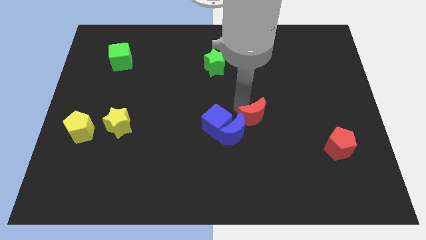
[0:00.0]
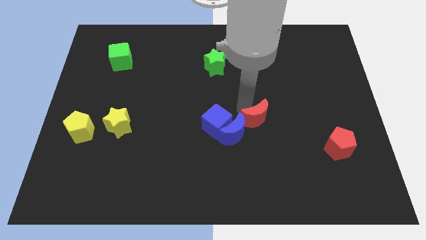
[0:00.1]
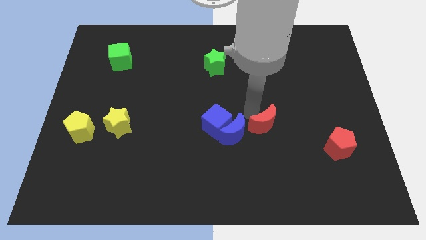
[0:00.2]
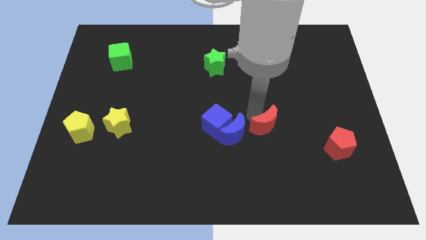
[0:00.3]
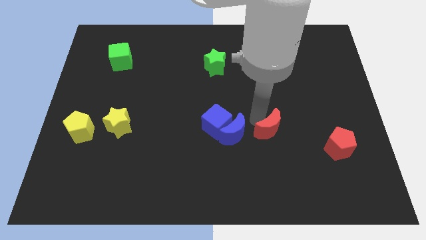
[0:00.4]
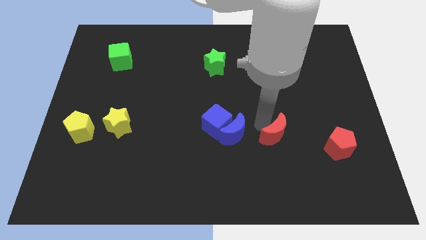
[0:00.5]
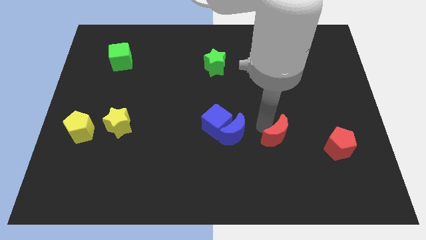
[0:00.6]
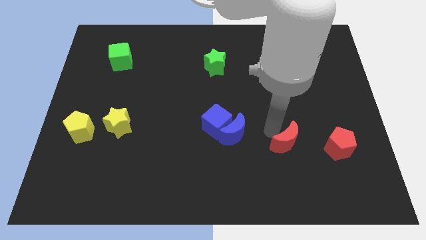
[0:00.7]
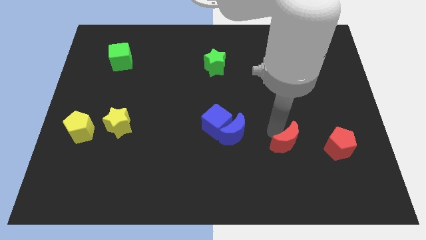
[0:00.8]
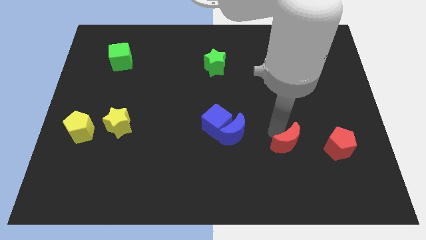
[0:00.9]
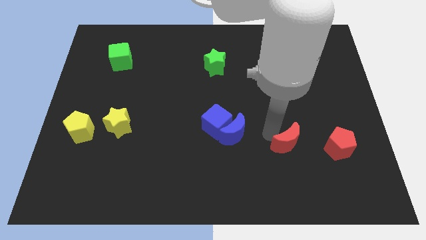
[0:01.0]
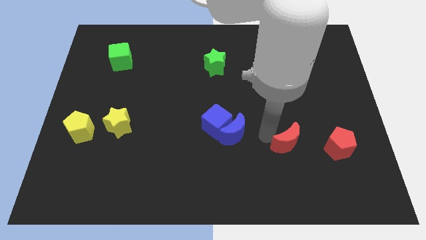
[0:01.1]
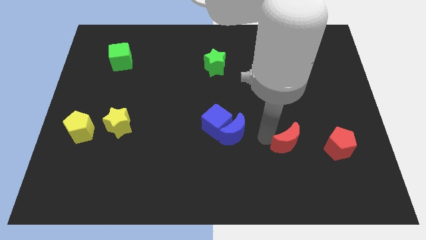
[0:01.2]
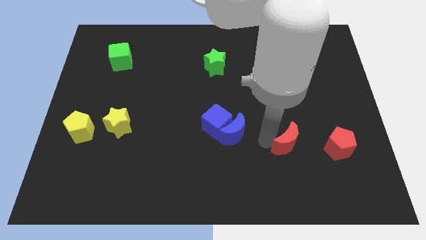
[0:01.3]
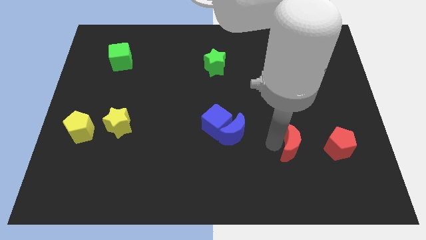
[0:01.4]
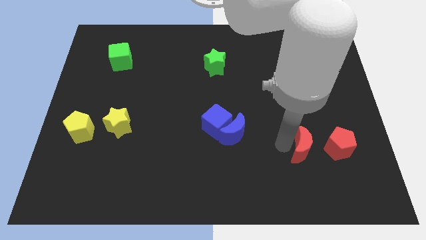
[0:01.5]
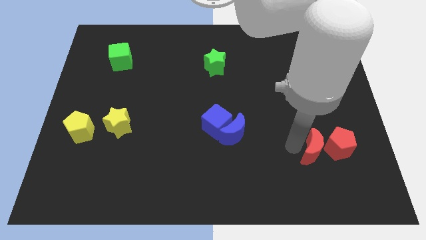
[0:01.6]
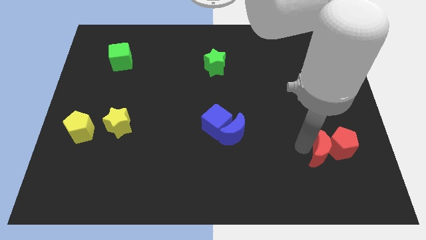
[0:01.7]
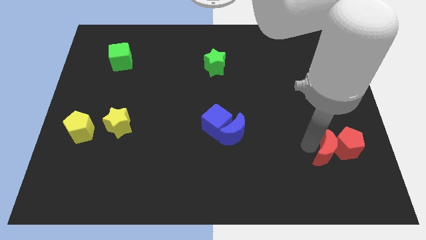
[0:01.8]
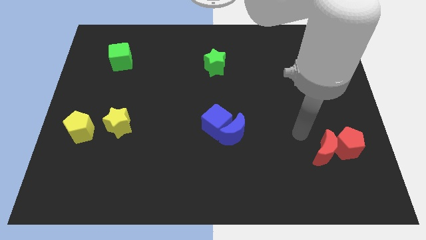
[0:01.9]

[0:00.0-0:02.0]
move the red crescent into the right to the red pentagon

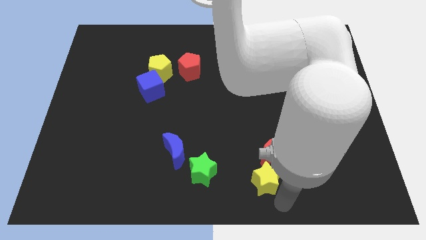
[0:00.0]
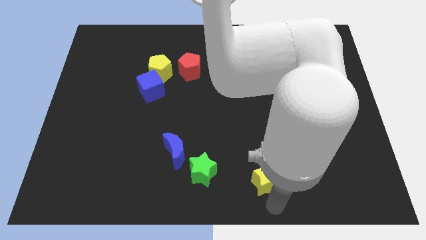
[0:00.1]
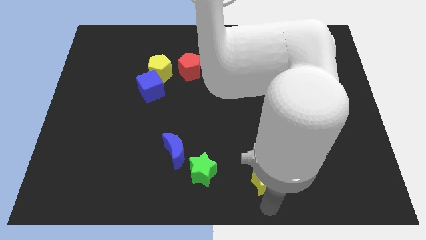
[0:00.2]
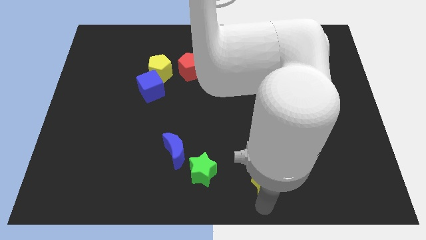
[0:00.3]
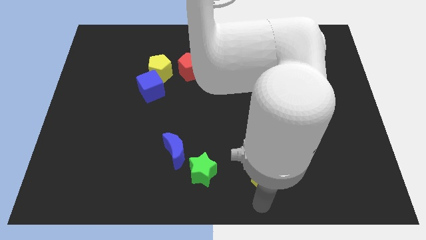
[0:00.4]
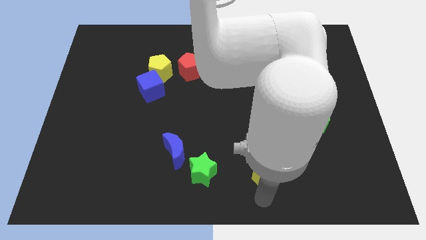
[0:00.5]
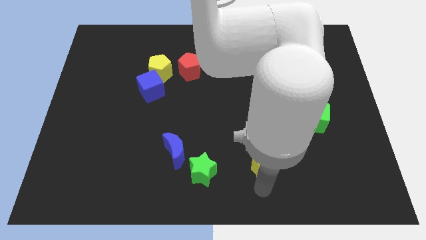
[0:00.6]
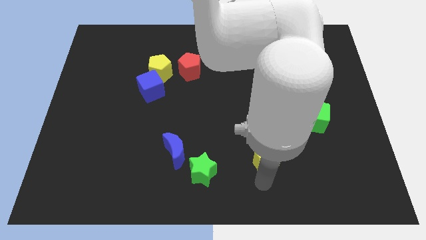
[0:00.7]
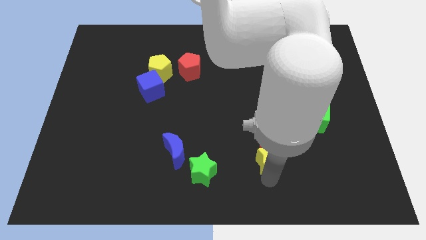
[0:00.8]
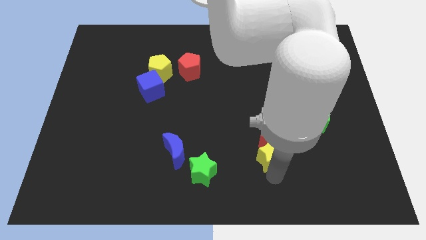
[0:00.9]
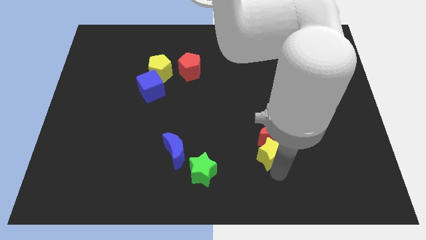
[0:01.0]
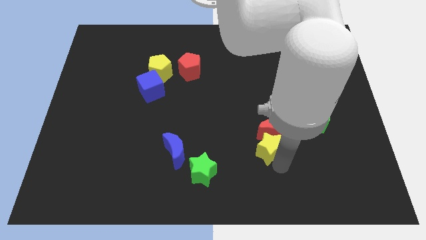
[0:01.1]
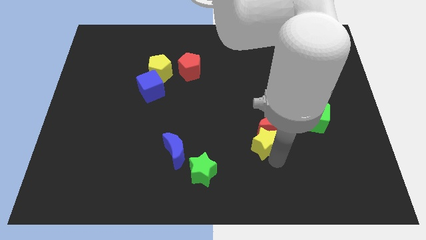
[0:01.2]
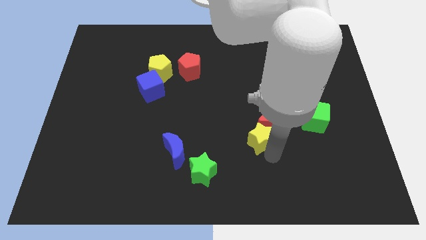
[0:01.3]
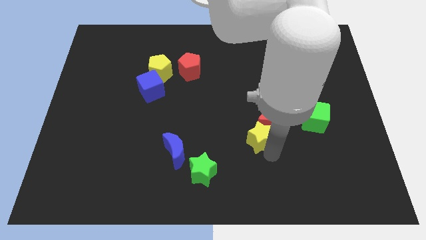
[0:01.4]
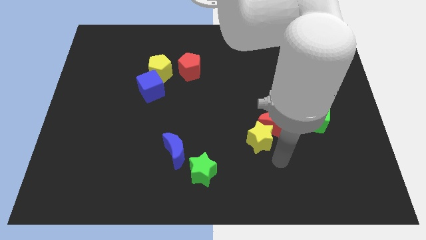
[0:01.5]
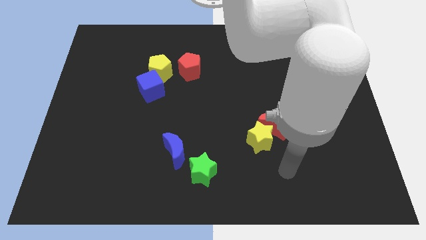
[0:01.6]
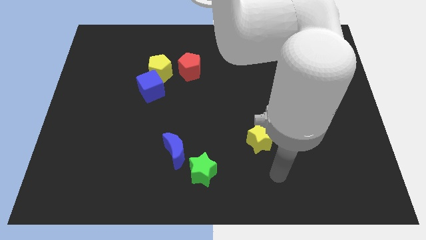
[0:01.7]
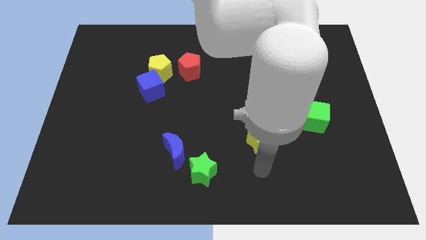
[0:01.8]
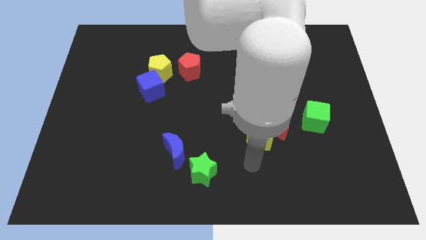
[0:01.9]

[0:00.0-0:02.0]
move the yellow star into the red crescent

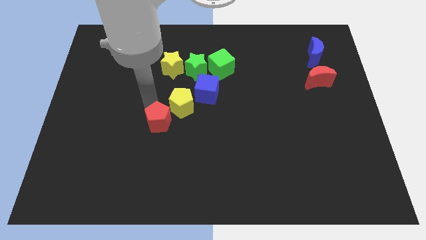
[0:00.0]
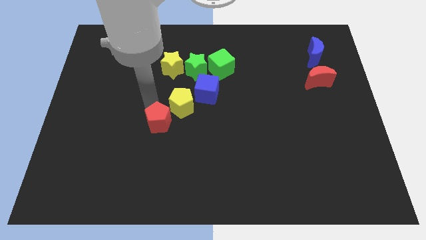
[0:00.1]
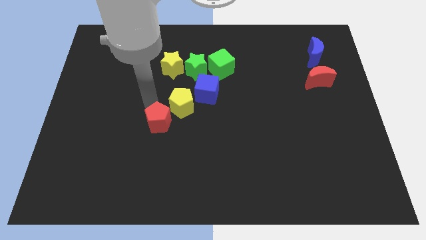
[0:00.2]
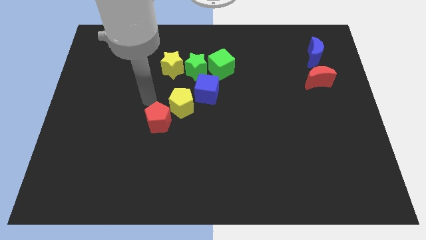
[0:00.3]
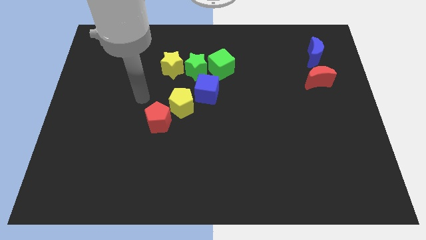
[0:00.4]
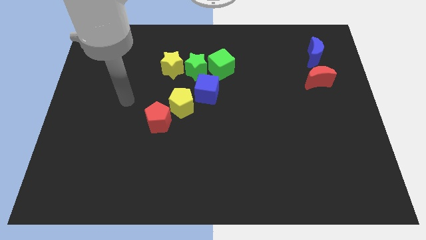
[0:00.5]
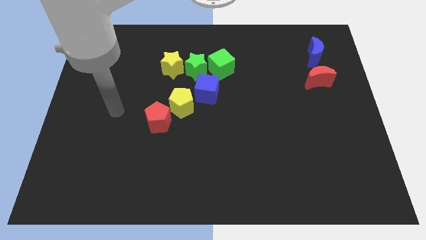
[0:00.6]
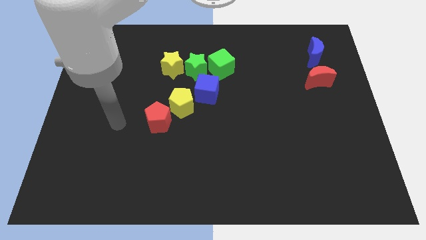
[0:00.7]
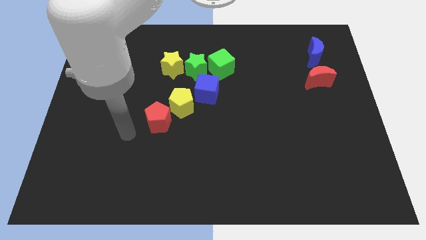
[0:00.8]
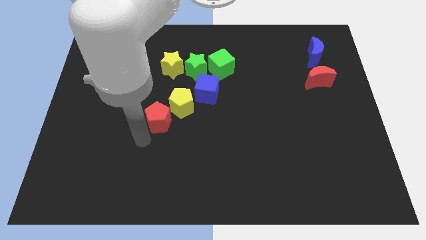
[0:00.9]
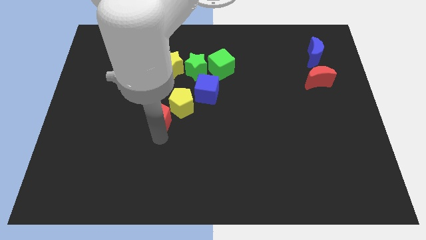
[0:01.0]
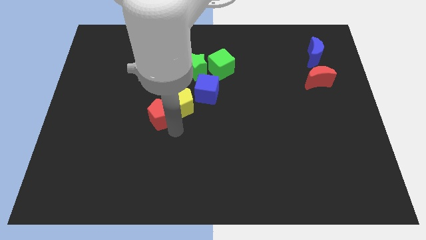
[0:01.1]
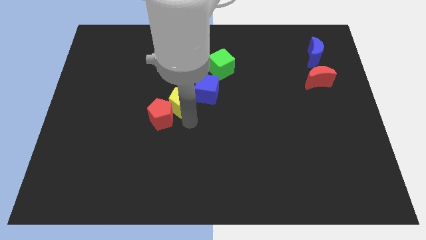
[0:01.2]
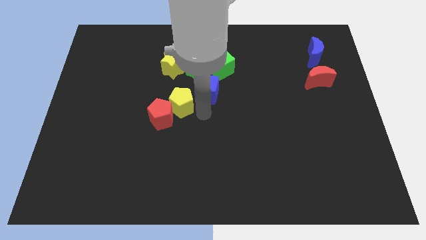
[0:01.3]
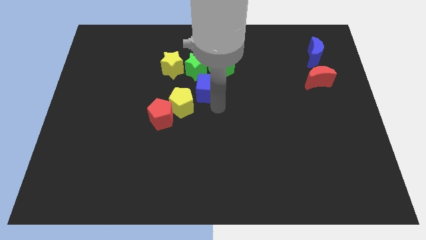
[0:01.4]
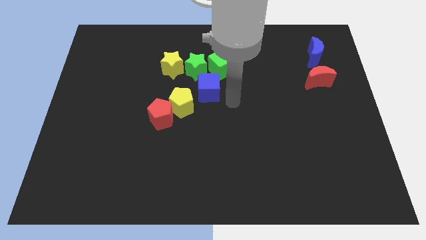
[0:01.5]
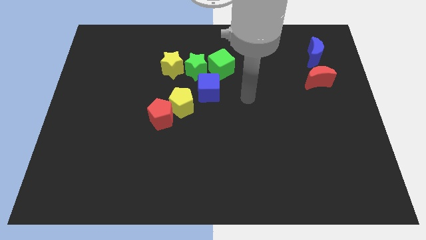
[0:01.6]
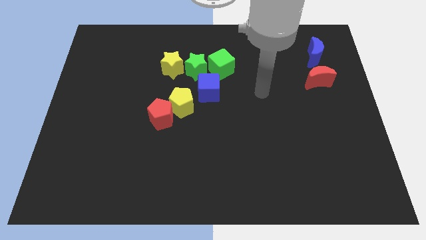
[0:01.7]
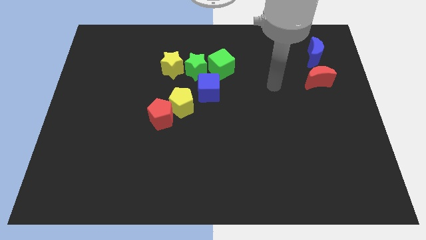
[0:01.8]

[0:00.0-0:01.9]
move yourself away from the red pentagon

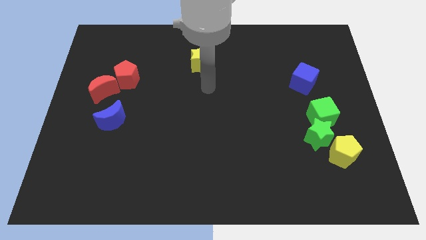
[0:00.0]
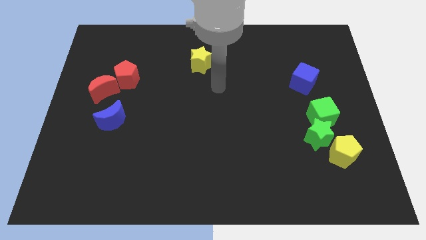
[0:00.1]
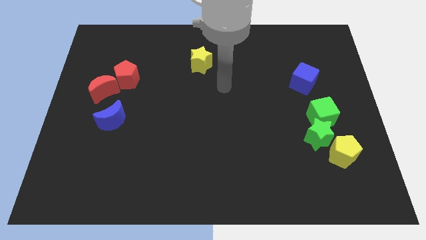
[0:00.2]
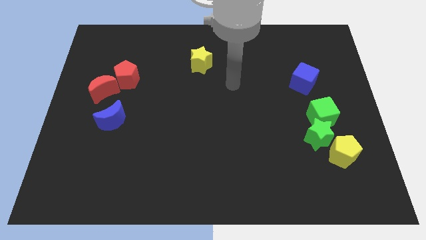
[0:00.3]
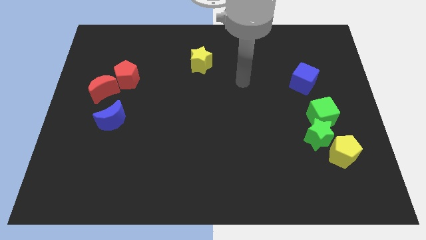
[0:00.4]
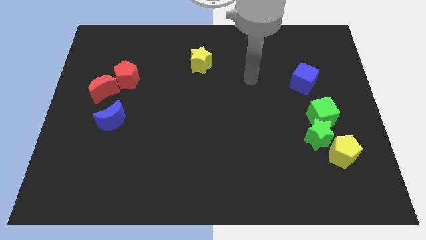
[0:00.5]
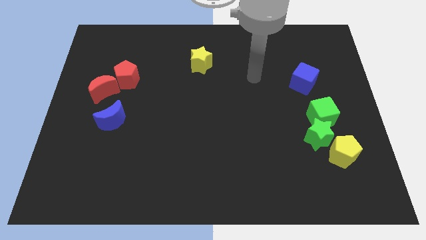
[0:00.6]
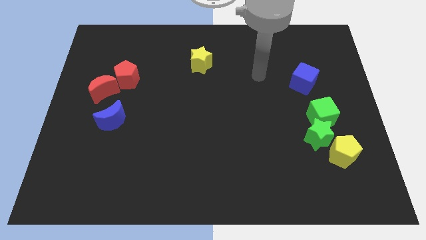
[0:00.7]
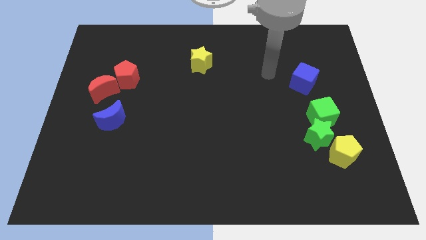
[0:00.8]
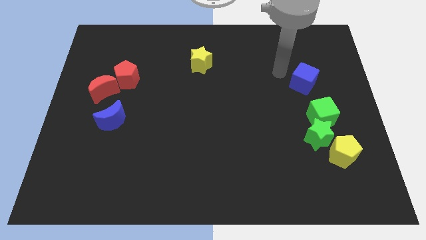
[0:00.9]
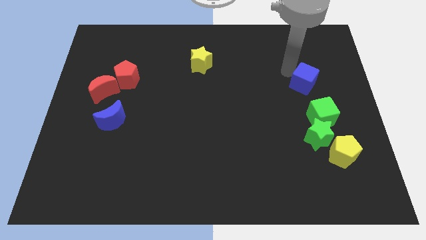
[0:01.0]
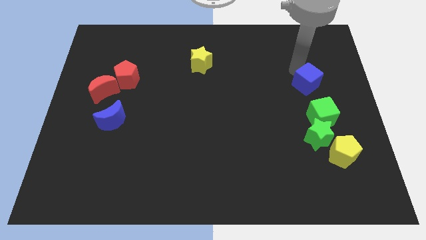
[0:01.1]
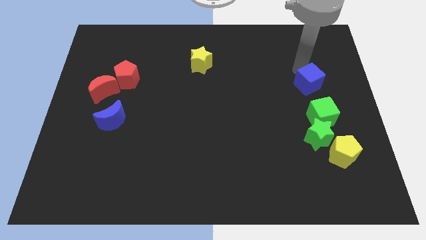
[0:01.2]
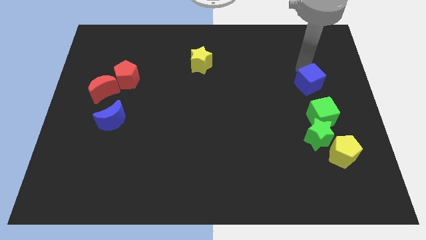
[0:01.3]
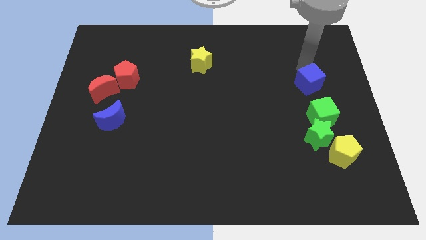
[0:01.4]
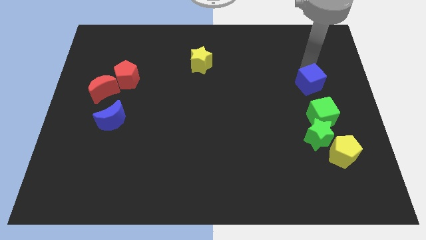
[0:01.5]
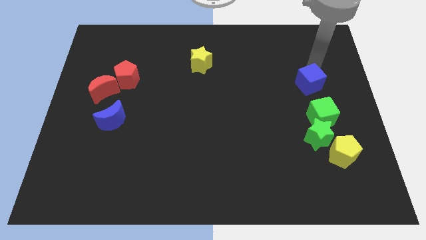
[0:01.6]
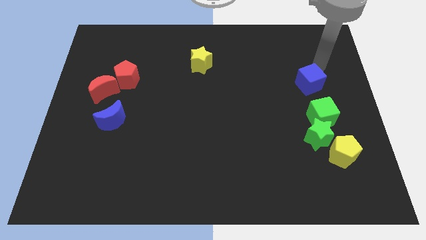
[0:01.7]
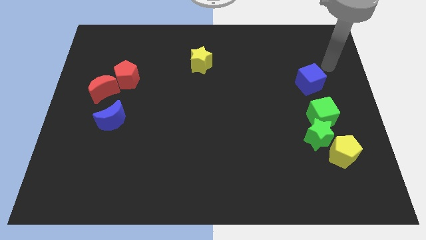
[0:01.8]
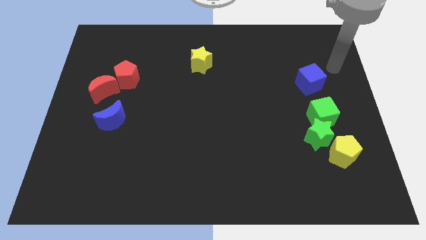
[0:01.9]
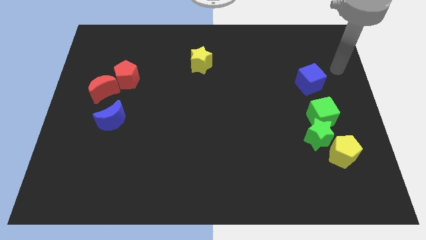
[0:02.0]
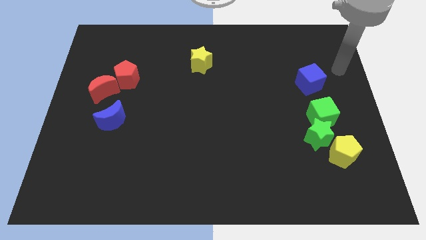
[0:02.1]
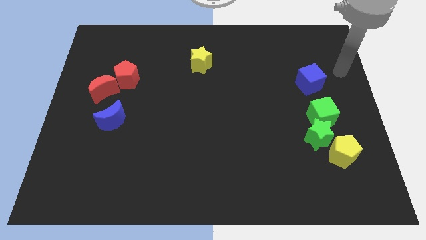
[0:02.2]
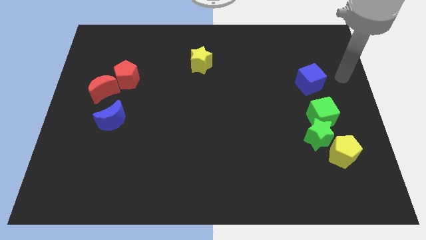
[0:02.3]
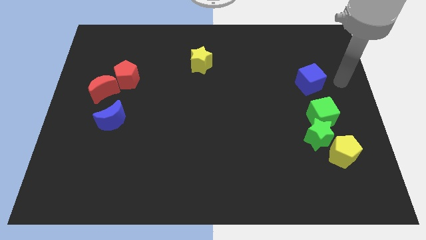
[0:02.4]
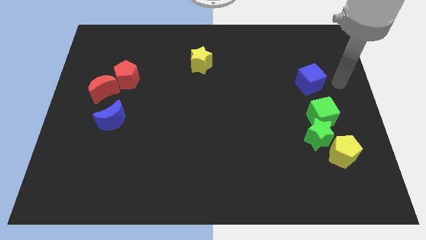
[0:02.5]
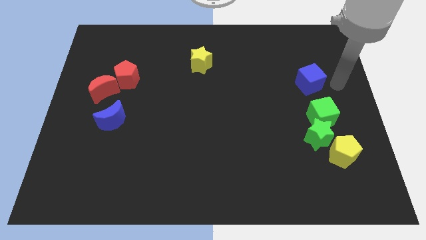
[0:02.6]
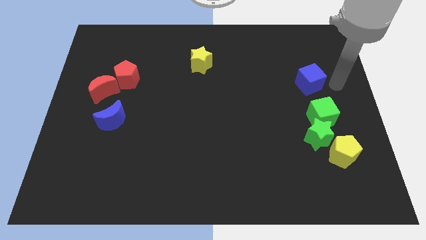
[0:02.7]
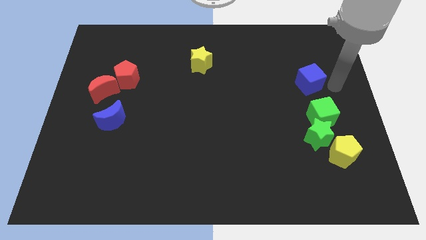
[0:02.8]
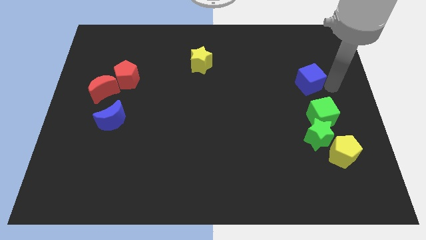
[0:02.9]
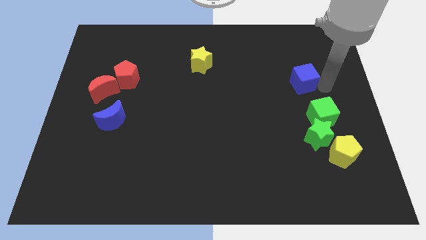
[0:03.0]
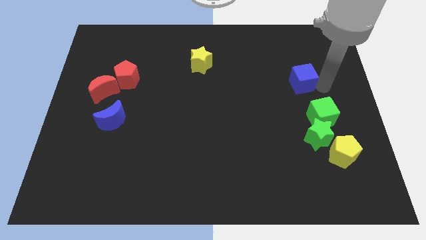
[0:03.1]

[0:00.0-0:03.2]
move the blue cube slightly towards left
